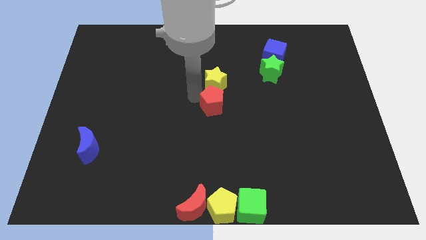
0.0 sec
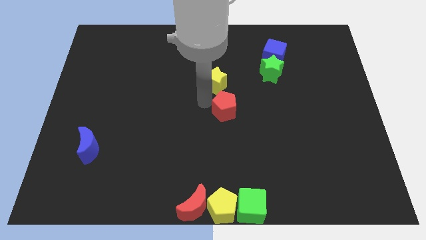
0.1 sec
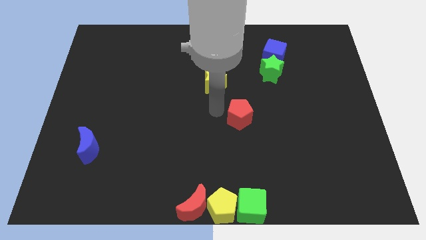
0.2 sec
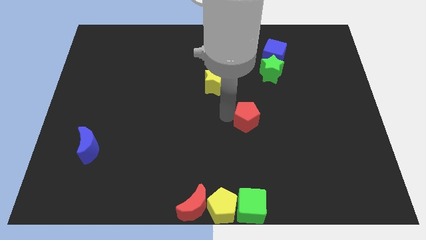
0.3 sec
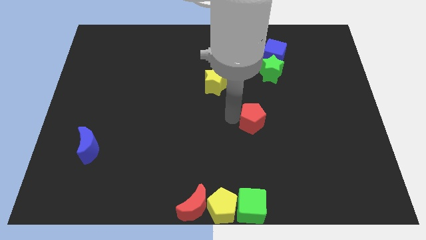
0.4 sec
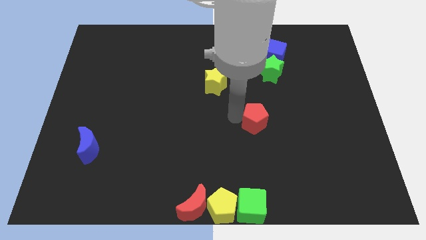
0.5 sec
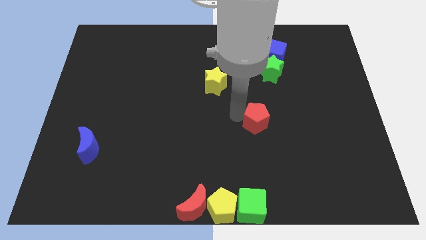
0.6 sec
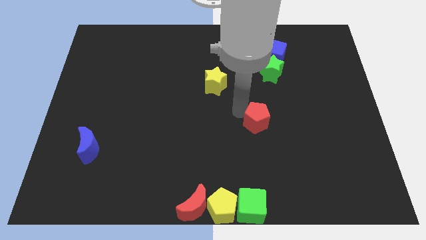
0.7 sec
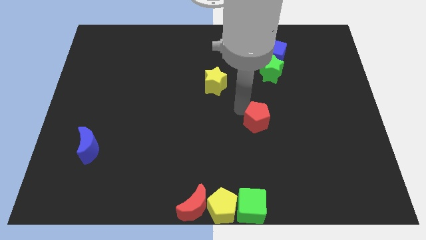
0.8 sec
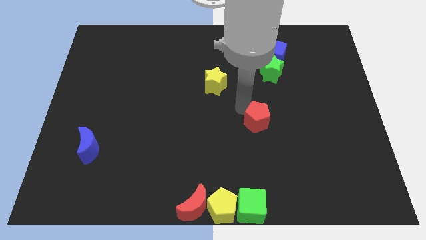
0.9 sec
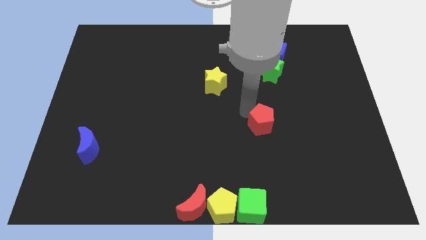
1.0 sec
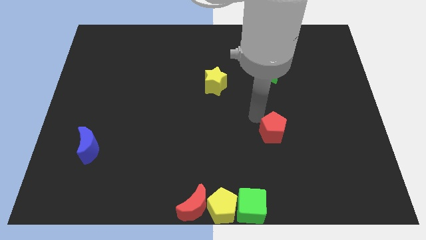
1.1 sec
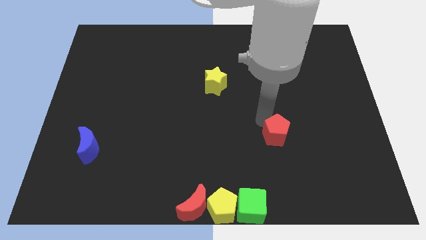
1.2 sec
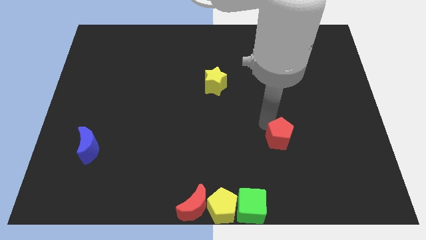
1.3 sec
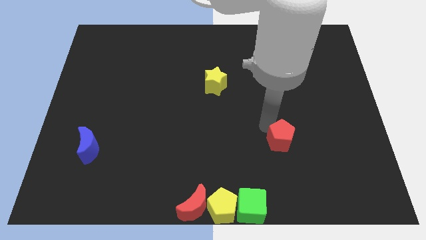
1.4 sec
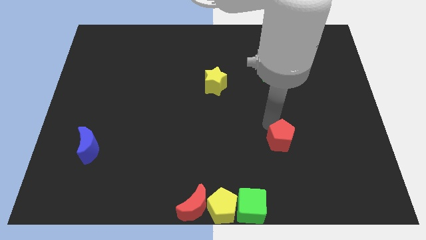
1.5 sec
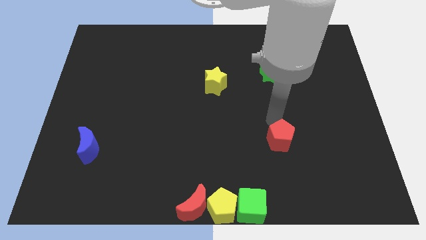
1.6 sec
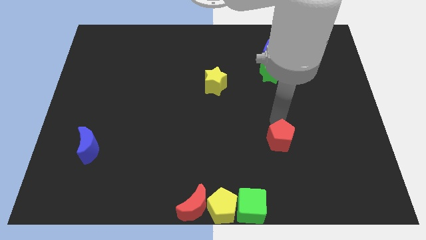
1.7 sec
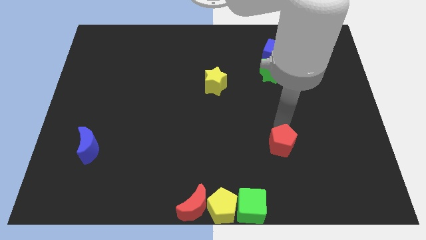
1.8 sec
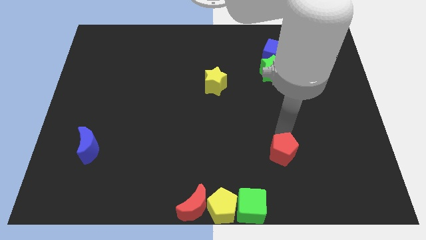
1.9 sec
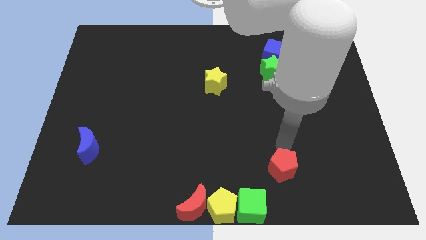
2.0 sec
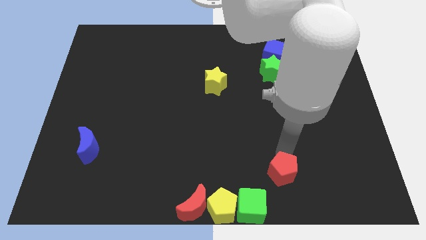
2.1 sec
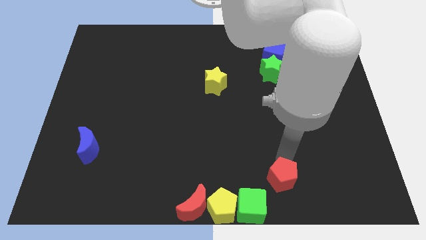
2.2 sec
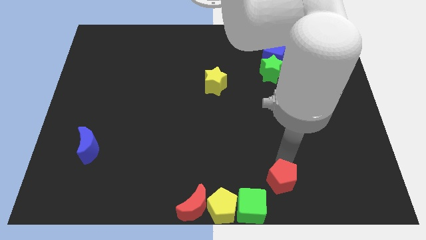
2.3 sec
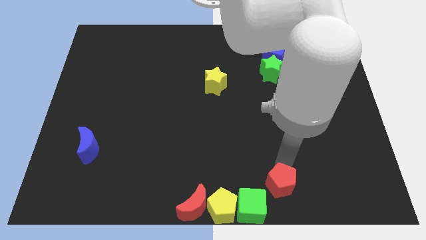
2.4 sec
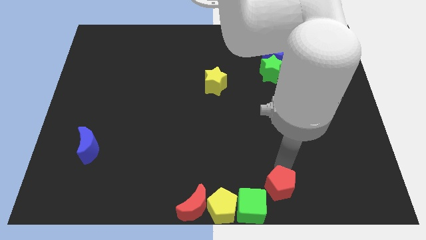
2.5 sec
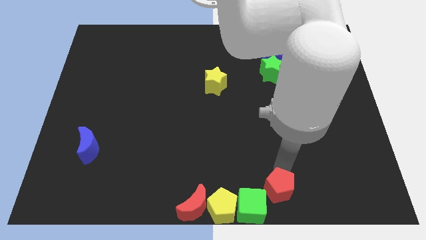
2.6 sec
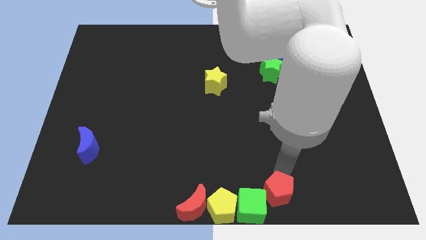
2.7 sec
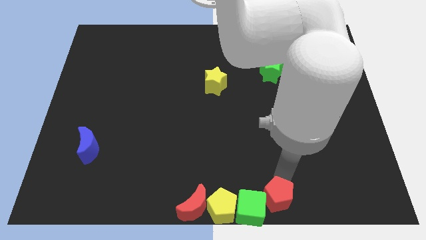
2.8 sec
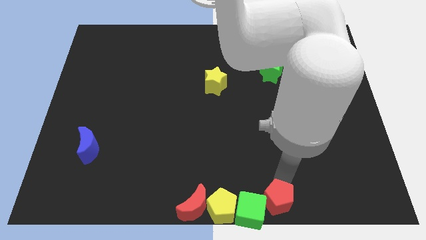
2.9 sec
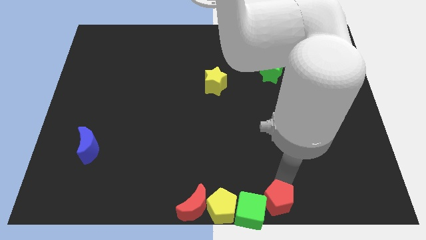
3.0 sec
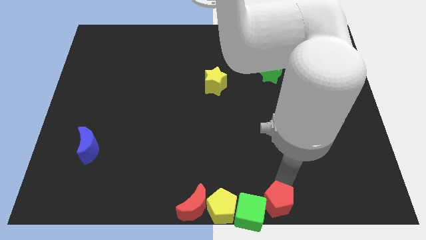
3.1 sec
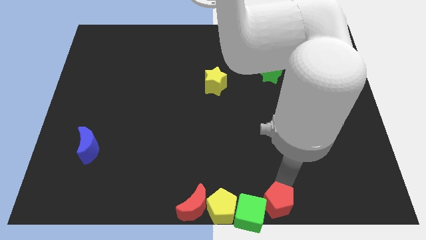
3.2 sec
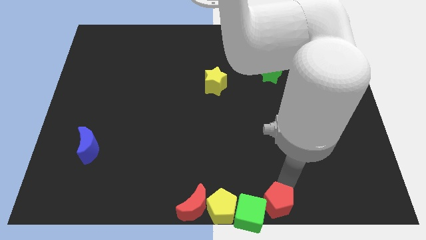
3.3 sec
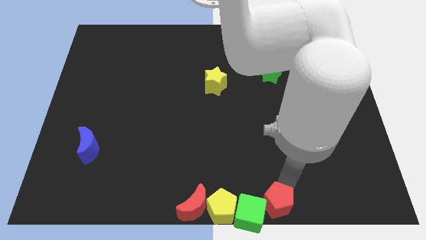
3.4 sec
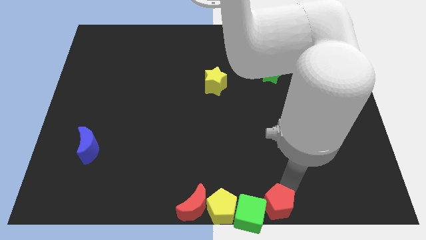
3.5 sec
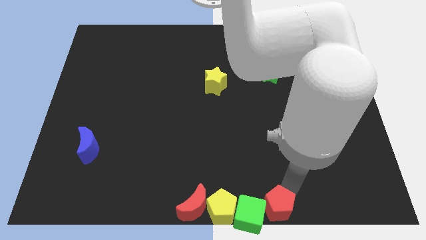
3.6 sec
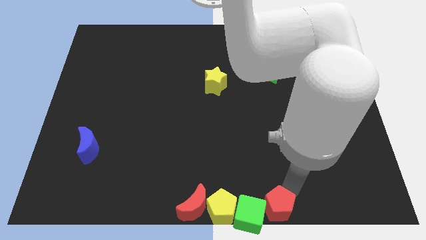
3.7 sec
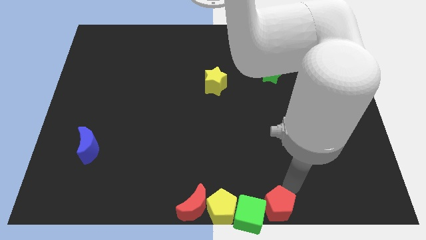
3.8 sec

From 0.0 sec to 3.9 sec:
push red pentagon in to green cube

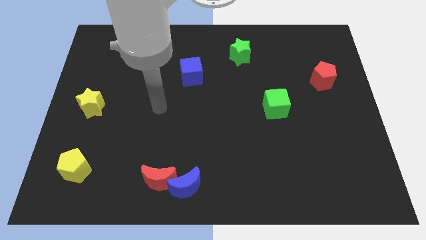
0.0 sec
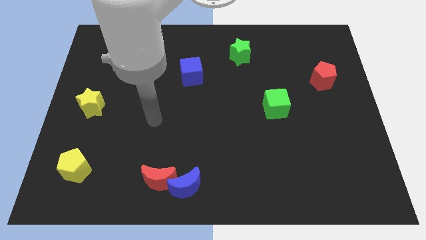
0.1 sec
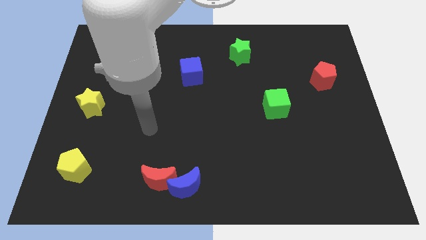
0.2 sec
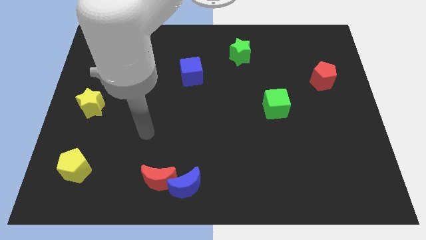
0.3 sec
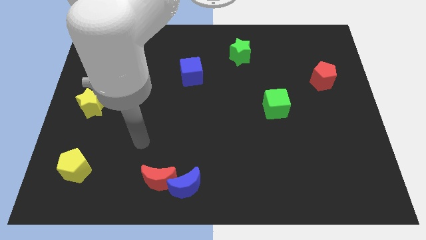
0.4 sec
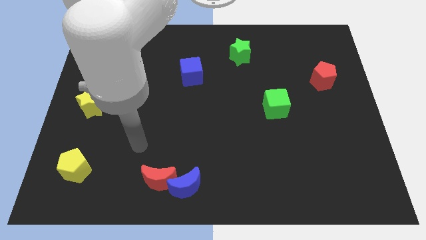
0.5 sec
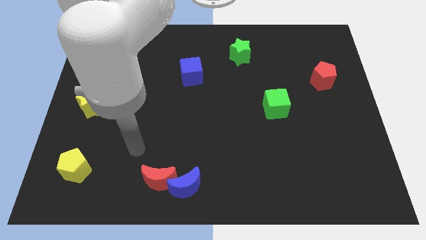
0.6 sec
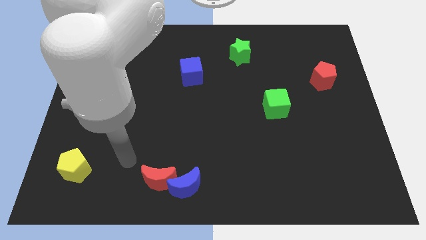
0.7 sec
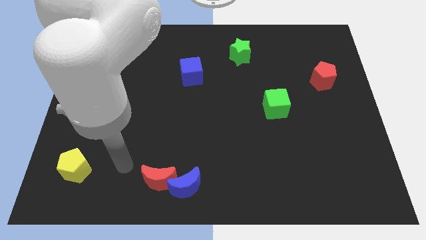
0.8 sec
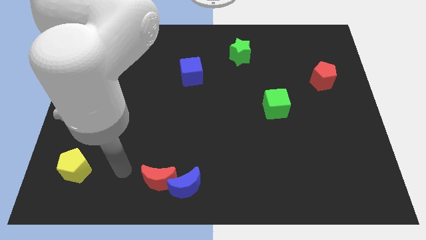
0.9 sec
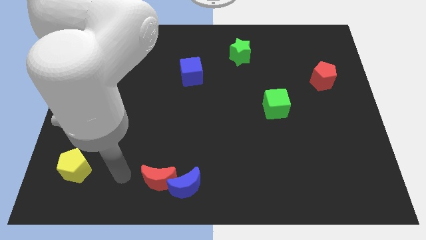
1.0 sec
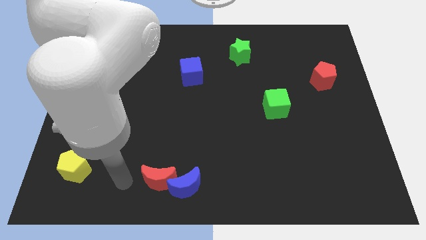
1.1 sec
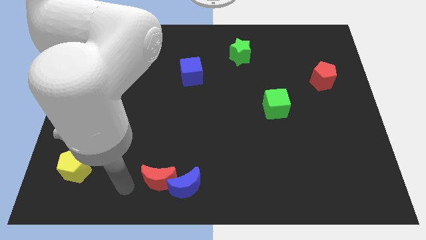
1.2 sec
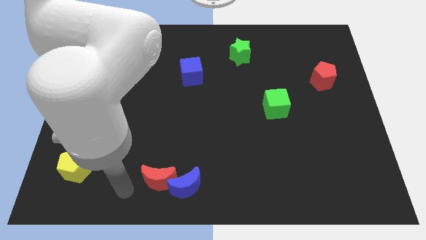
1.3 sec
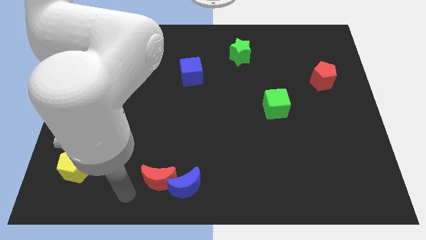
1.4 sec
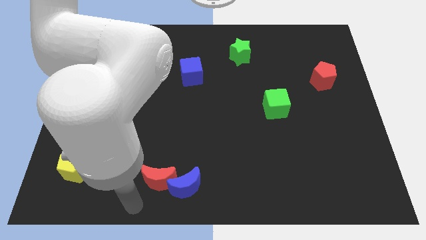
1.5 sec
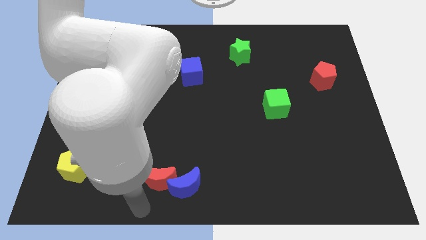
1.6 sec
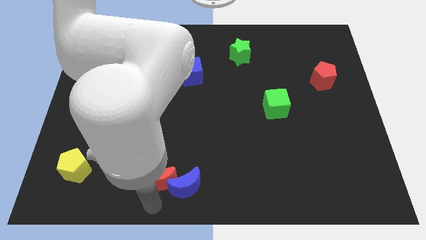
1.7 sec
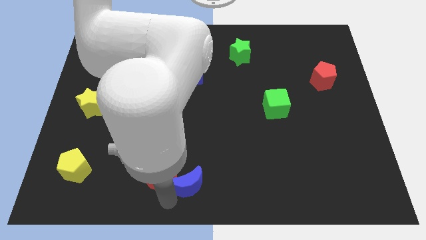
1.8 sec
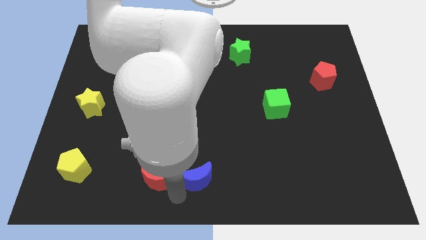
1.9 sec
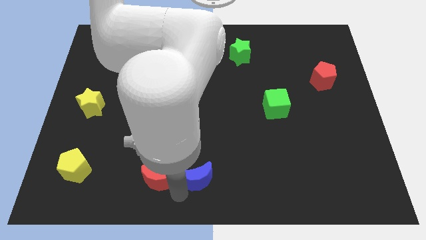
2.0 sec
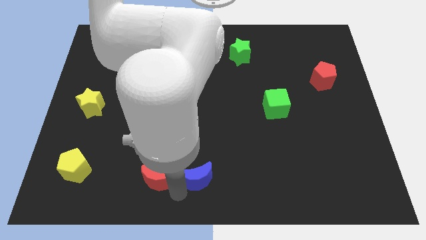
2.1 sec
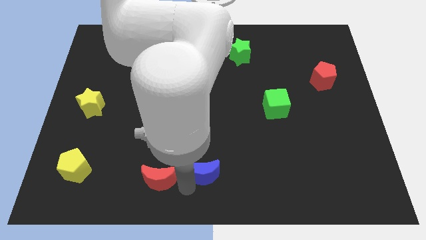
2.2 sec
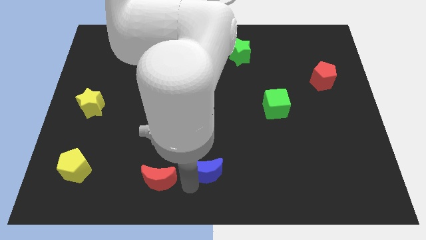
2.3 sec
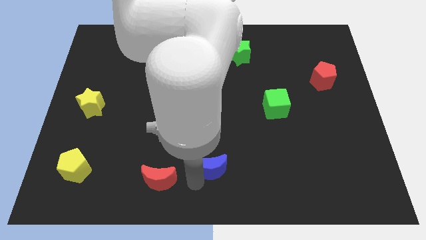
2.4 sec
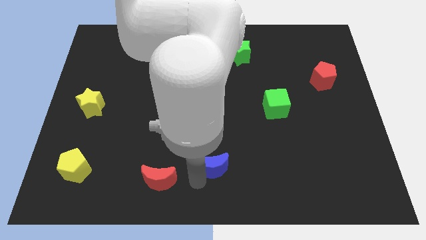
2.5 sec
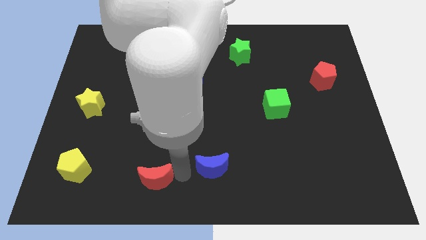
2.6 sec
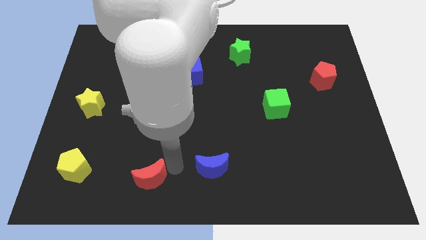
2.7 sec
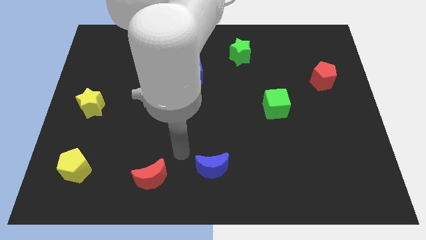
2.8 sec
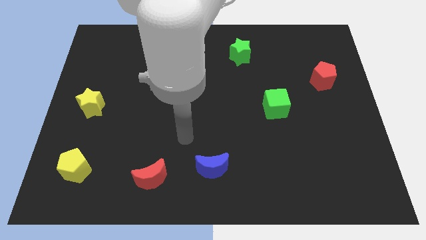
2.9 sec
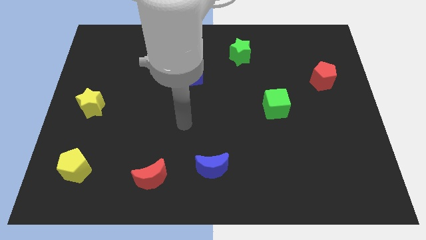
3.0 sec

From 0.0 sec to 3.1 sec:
separate the blue and red crescent

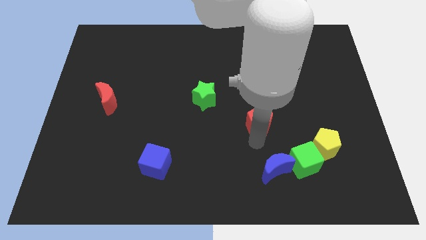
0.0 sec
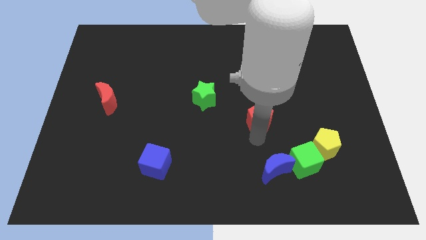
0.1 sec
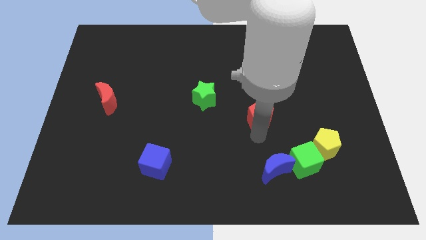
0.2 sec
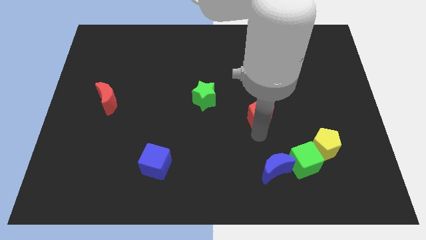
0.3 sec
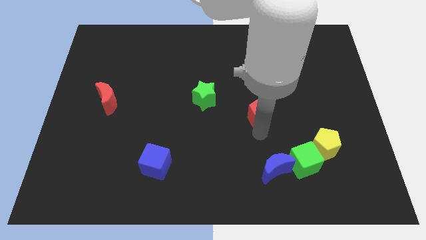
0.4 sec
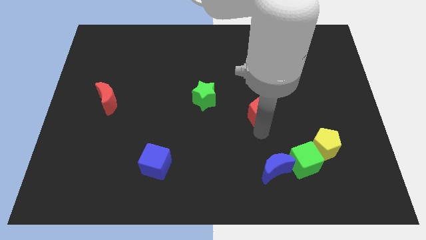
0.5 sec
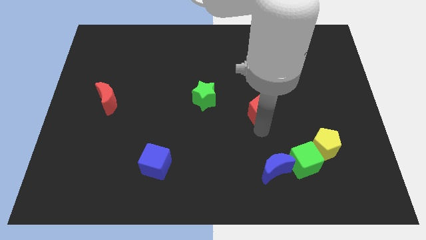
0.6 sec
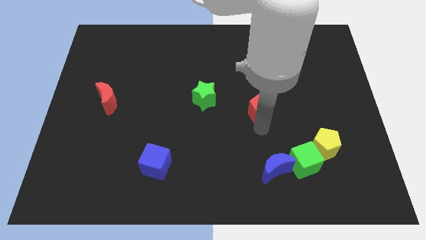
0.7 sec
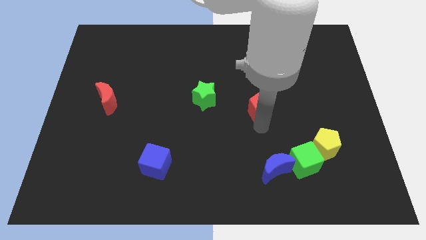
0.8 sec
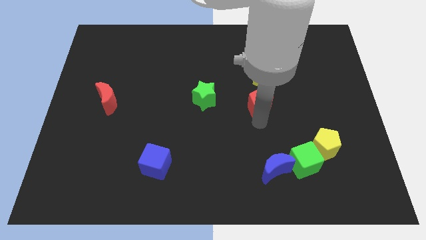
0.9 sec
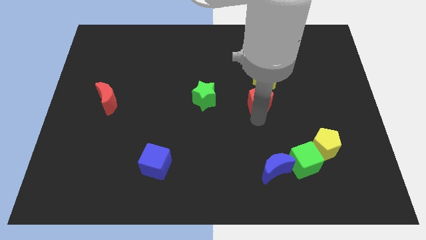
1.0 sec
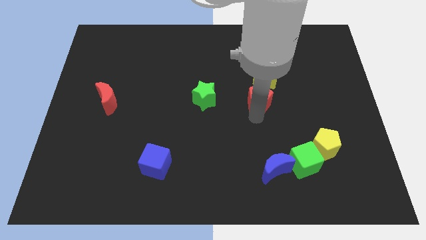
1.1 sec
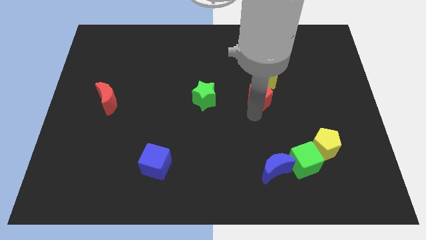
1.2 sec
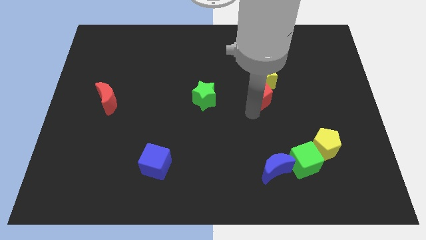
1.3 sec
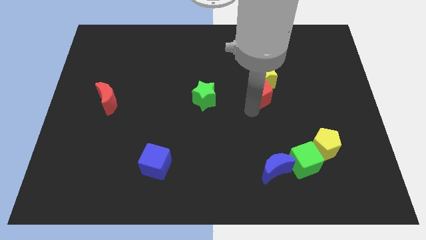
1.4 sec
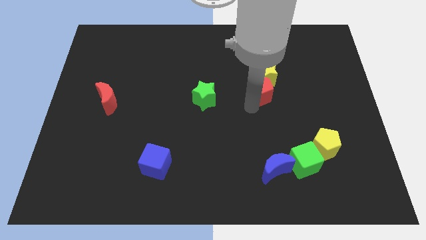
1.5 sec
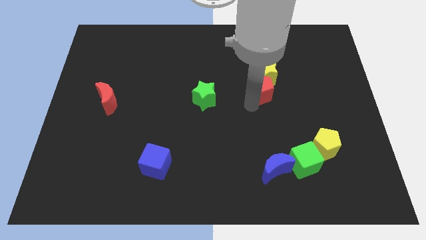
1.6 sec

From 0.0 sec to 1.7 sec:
place the red pentagon below the yellow star

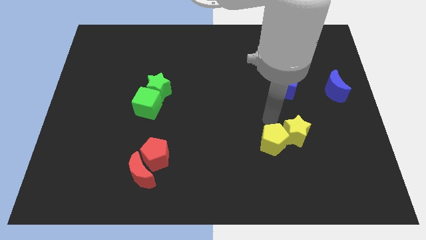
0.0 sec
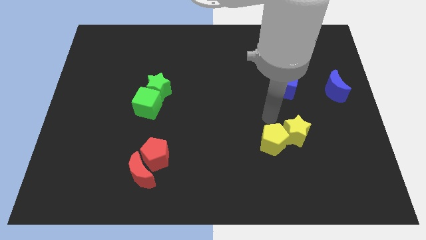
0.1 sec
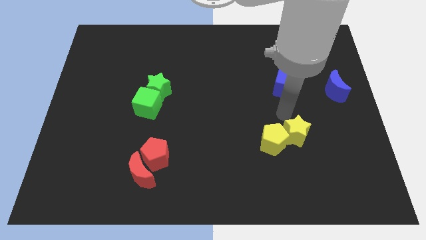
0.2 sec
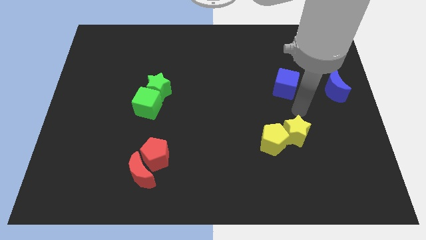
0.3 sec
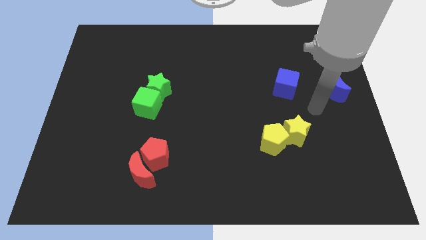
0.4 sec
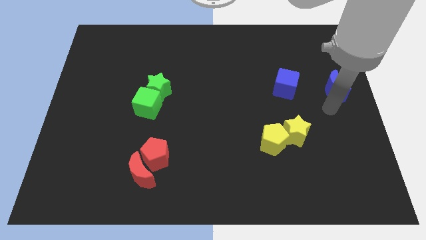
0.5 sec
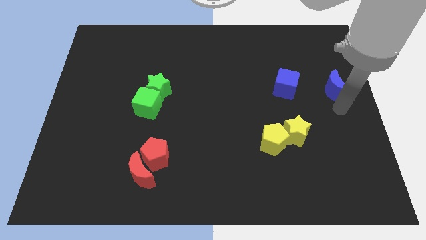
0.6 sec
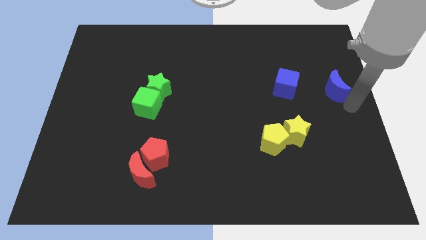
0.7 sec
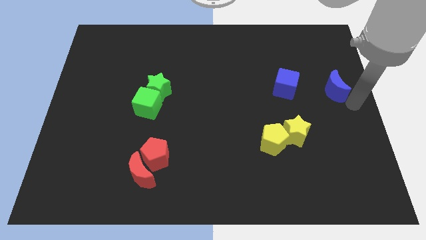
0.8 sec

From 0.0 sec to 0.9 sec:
move your arm away from the yellow pentagon
